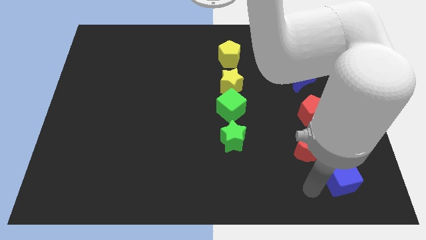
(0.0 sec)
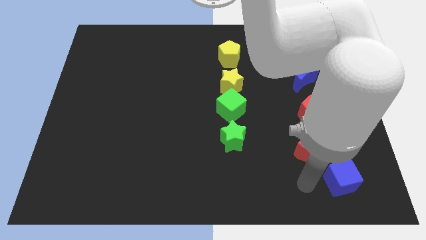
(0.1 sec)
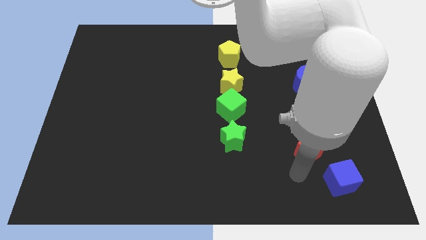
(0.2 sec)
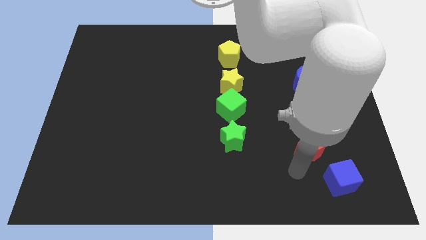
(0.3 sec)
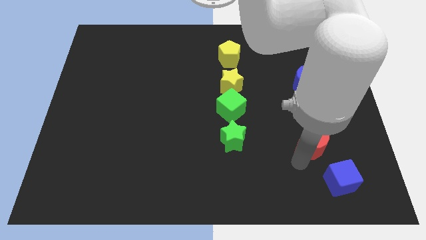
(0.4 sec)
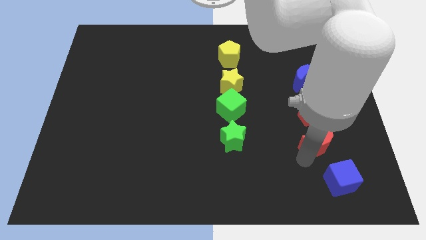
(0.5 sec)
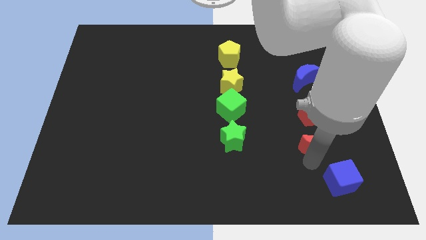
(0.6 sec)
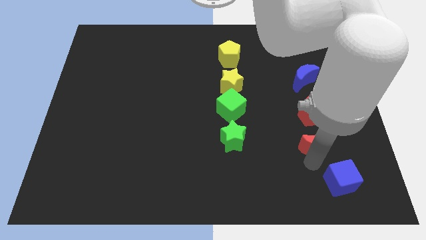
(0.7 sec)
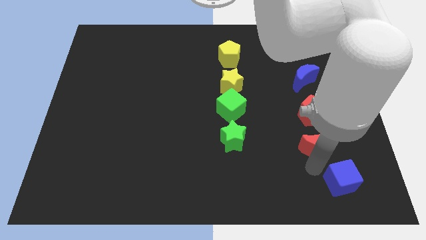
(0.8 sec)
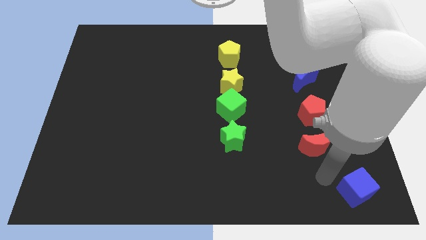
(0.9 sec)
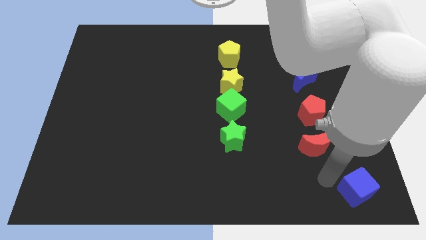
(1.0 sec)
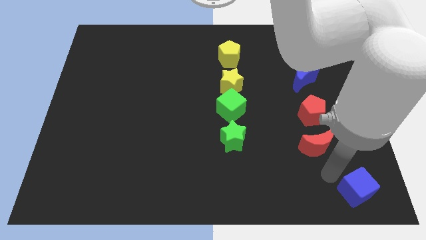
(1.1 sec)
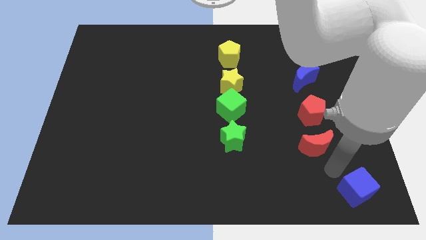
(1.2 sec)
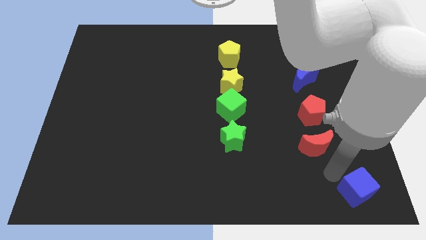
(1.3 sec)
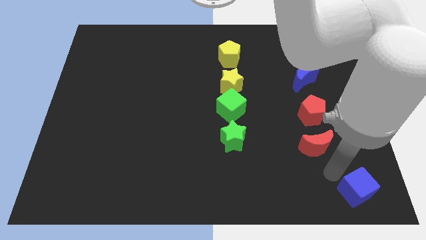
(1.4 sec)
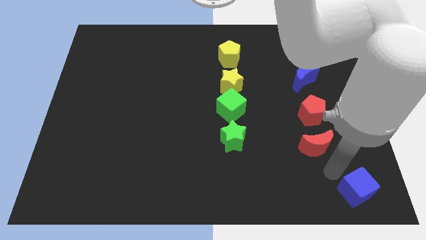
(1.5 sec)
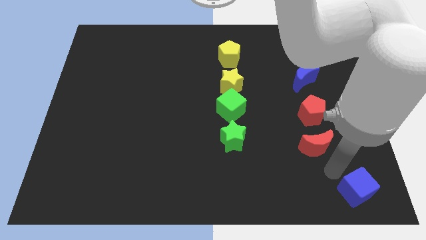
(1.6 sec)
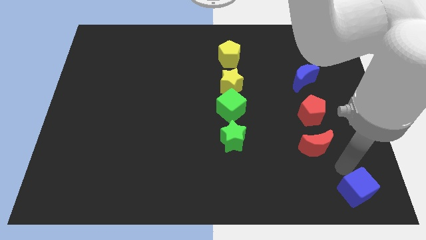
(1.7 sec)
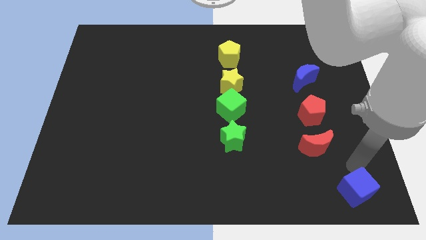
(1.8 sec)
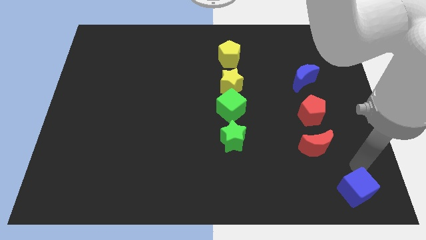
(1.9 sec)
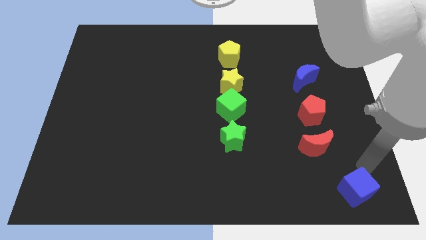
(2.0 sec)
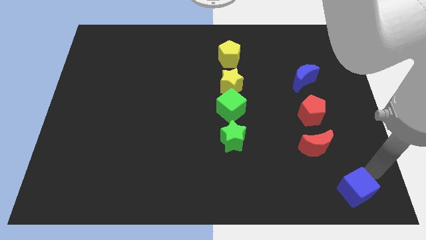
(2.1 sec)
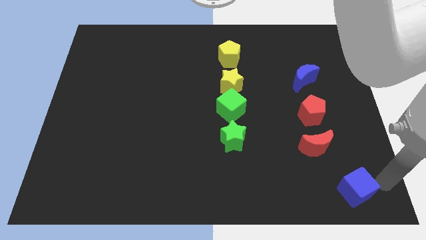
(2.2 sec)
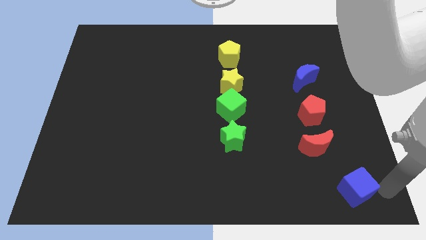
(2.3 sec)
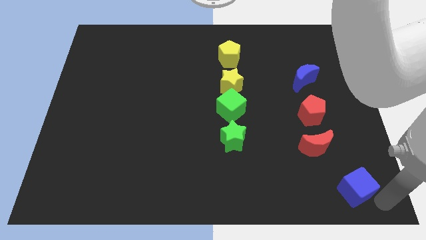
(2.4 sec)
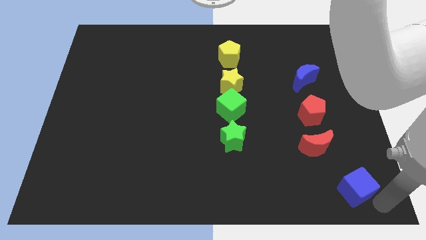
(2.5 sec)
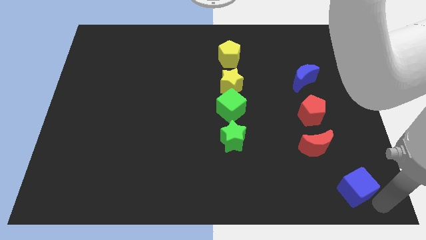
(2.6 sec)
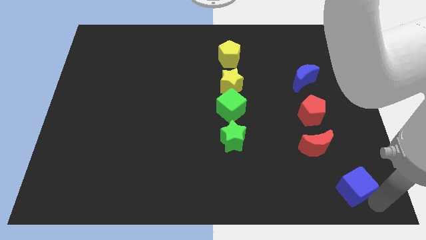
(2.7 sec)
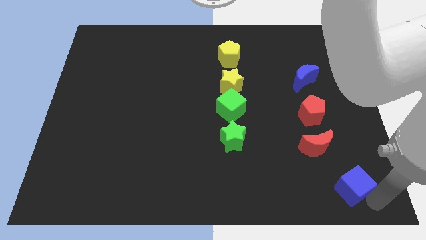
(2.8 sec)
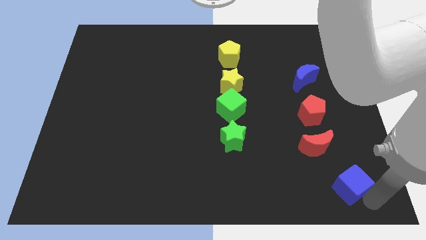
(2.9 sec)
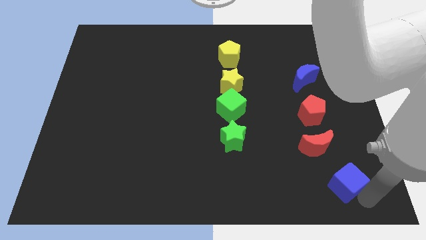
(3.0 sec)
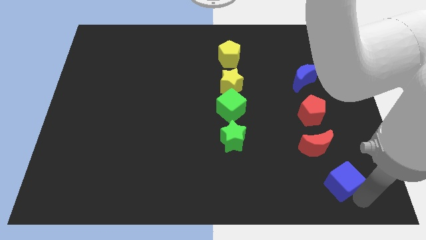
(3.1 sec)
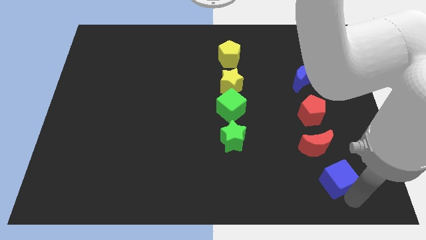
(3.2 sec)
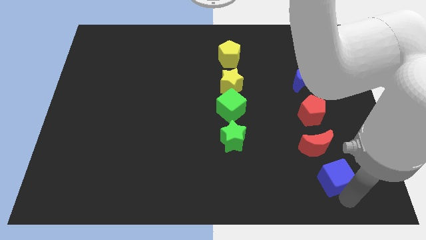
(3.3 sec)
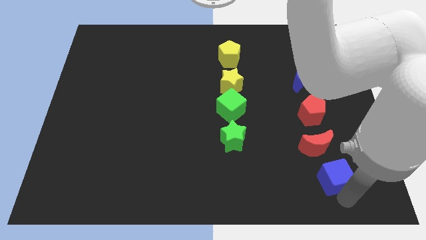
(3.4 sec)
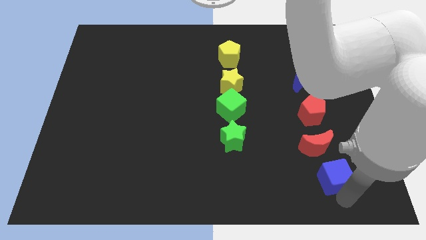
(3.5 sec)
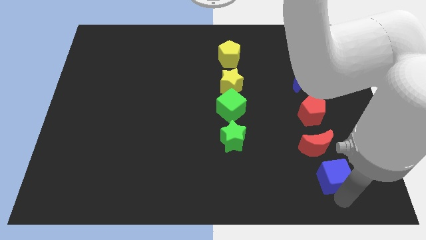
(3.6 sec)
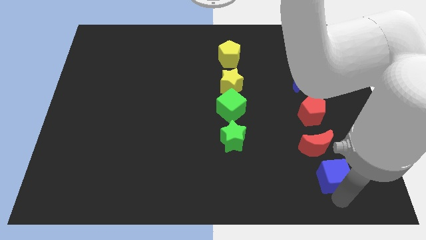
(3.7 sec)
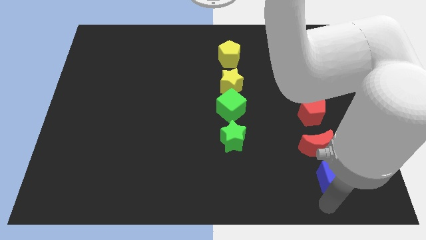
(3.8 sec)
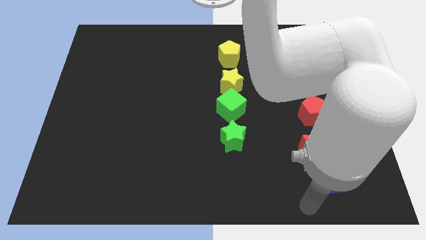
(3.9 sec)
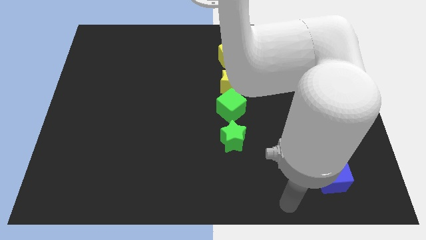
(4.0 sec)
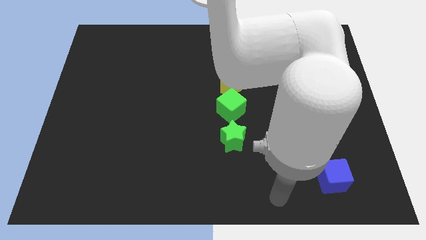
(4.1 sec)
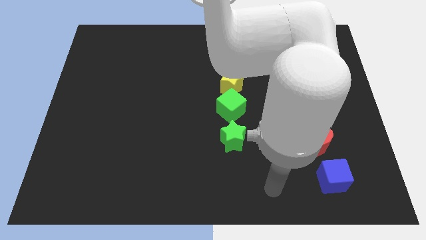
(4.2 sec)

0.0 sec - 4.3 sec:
place the blue cube below to the red crescent

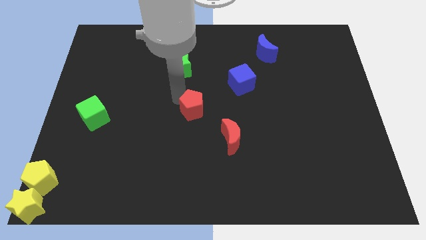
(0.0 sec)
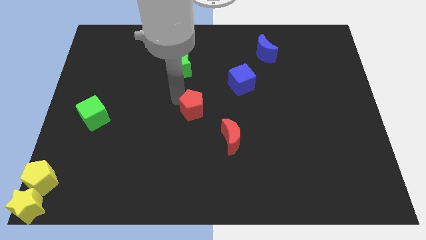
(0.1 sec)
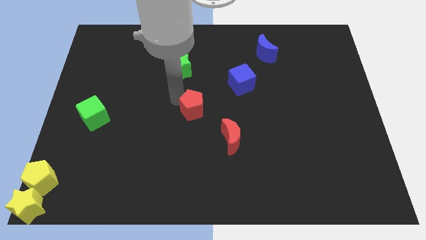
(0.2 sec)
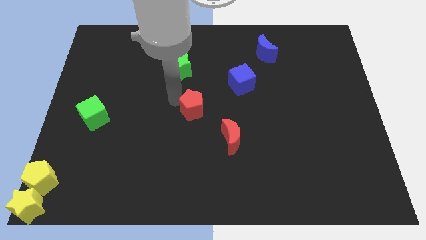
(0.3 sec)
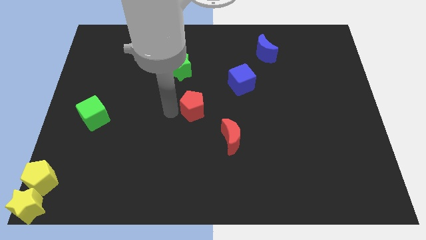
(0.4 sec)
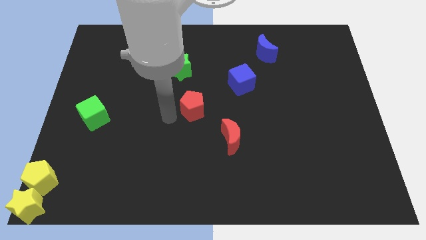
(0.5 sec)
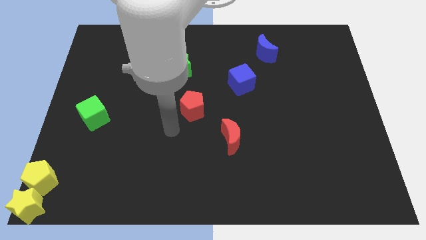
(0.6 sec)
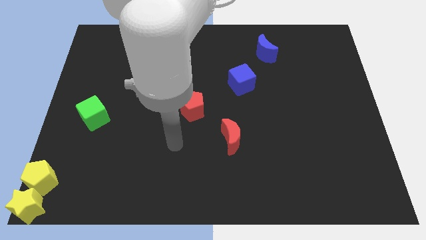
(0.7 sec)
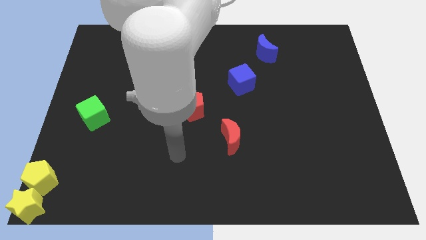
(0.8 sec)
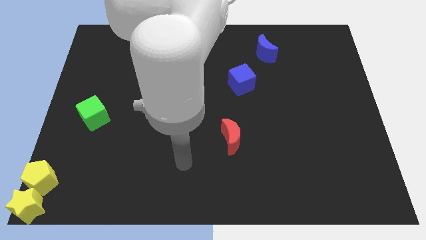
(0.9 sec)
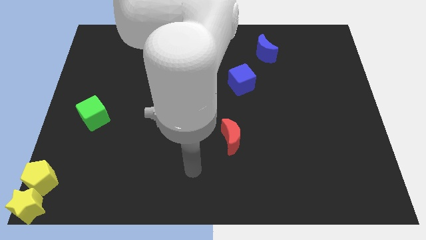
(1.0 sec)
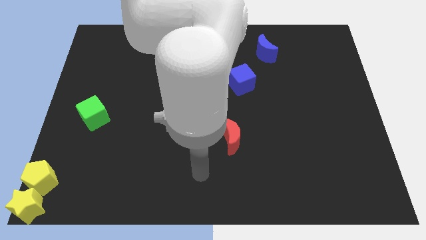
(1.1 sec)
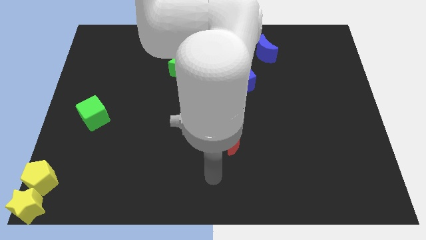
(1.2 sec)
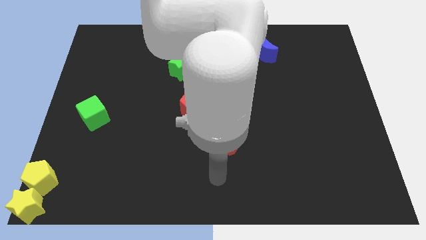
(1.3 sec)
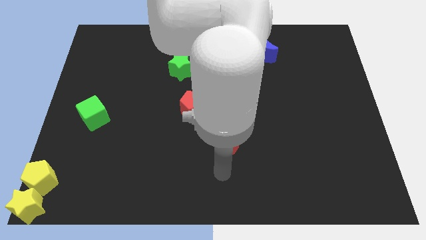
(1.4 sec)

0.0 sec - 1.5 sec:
move your arm away from the red pentagon

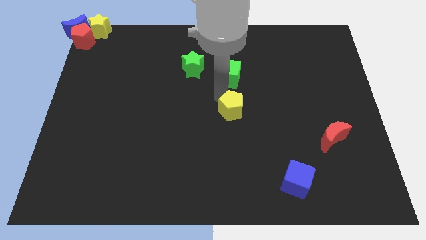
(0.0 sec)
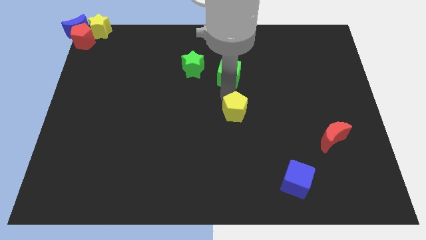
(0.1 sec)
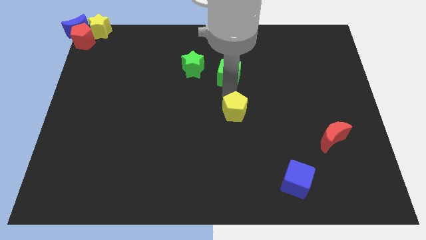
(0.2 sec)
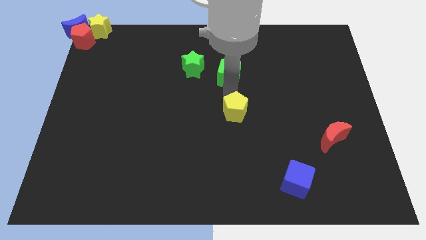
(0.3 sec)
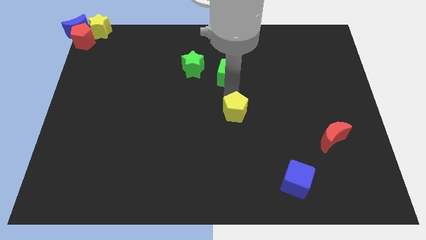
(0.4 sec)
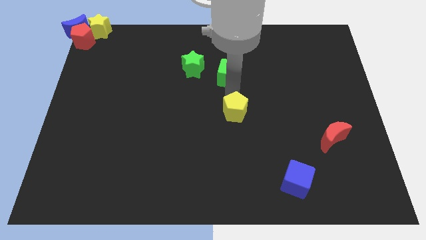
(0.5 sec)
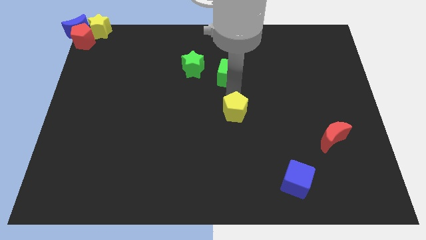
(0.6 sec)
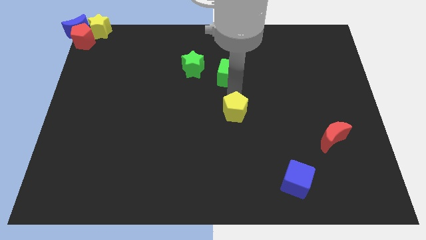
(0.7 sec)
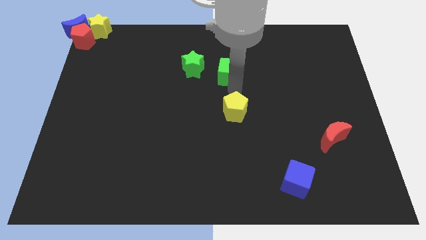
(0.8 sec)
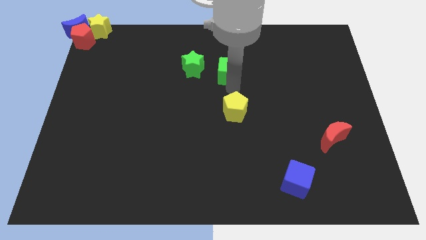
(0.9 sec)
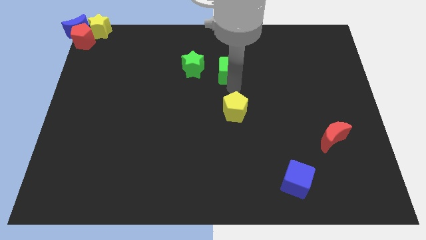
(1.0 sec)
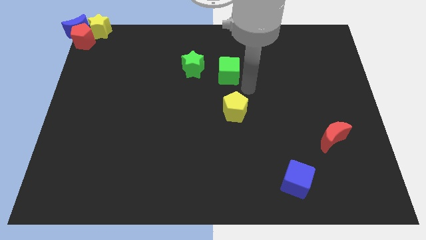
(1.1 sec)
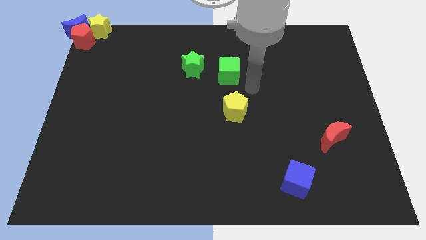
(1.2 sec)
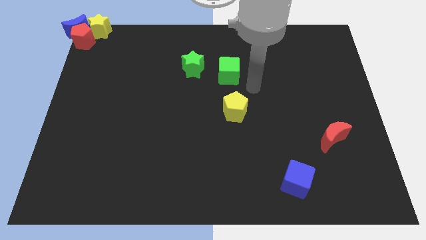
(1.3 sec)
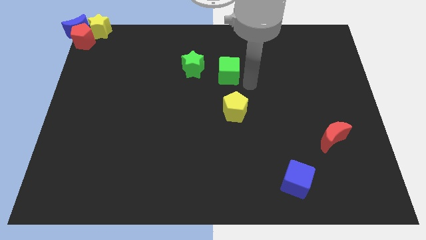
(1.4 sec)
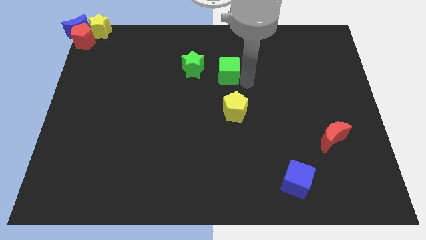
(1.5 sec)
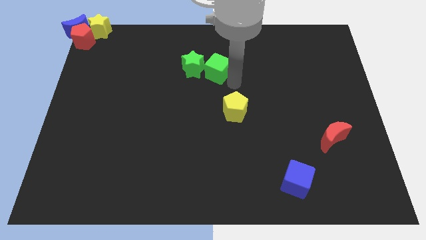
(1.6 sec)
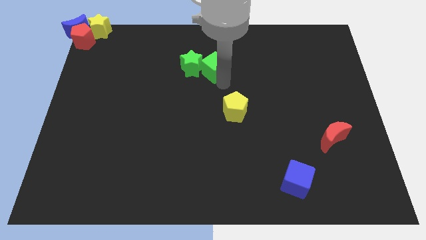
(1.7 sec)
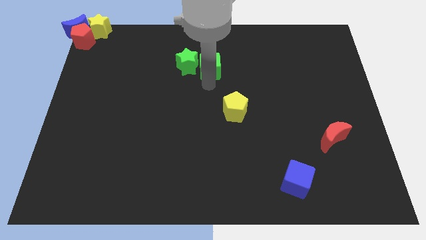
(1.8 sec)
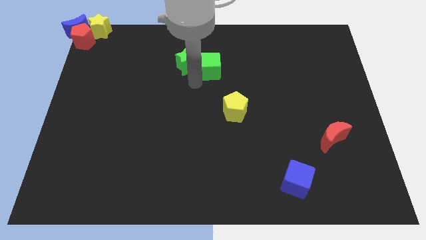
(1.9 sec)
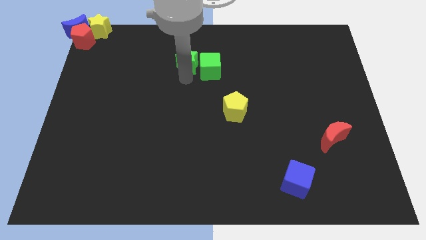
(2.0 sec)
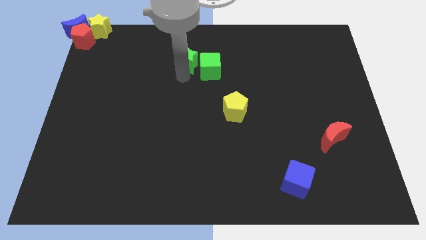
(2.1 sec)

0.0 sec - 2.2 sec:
push the green cube into the green star

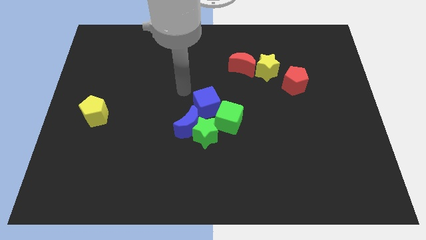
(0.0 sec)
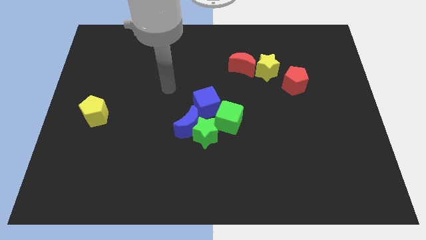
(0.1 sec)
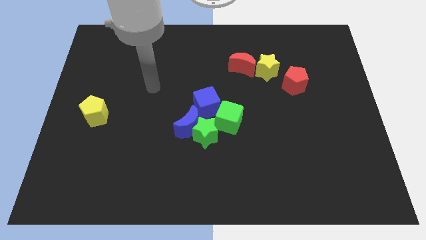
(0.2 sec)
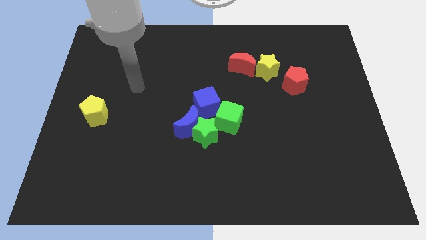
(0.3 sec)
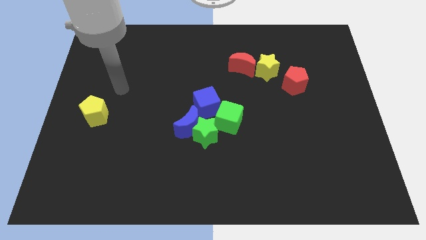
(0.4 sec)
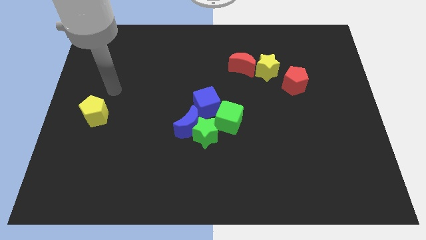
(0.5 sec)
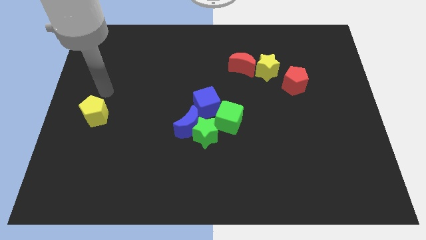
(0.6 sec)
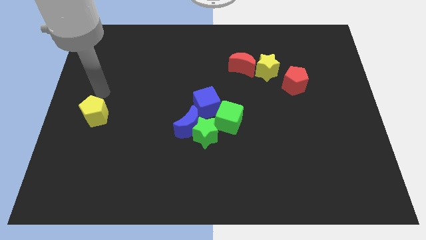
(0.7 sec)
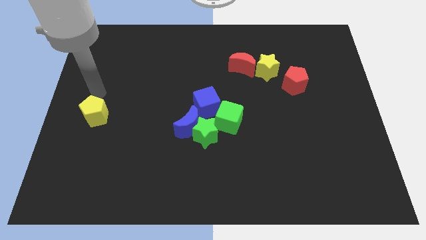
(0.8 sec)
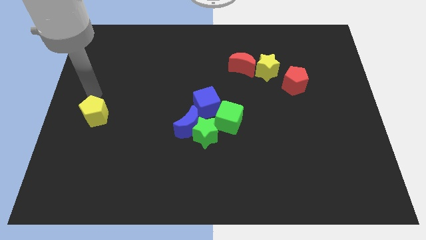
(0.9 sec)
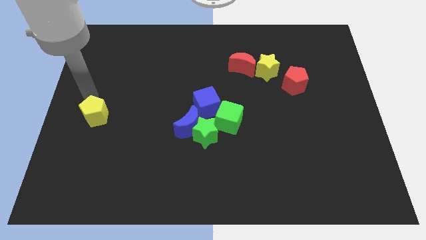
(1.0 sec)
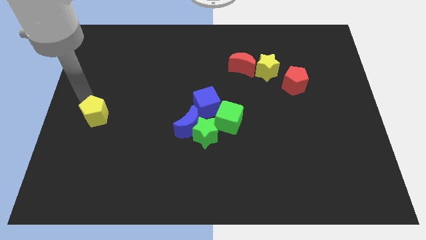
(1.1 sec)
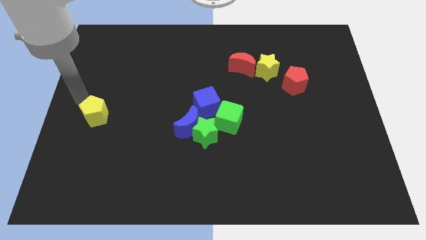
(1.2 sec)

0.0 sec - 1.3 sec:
move your arm towards yellow pentagon
